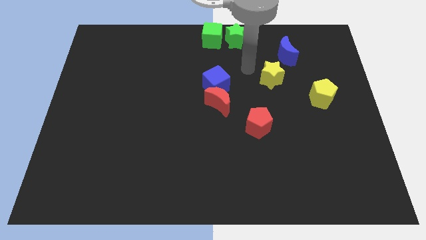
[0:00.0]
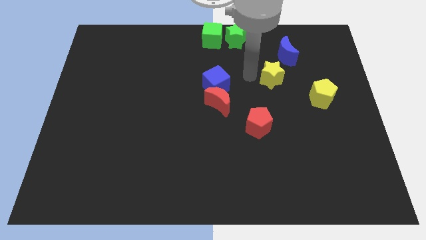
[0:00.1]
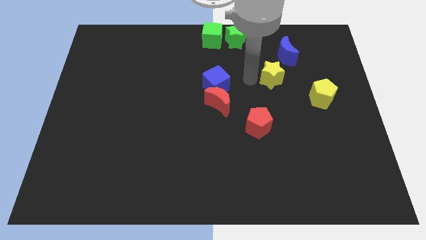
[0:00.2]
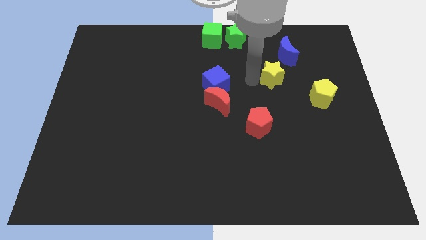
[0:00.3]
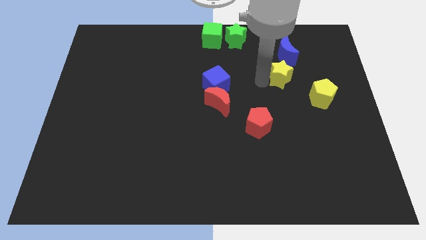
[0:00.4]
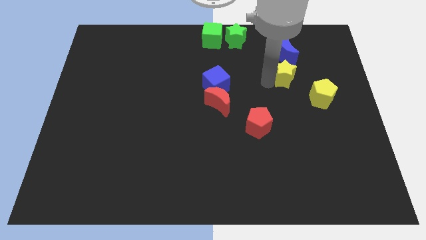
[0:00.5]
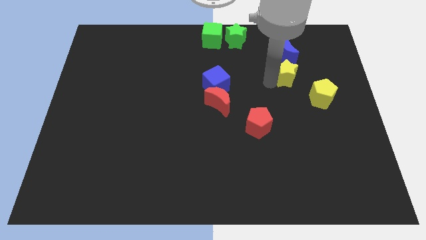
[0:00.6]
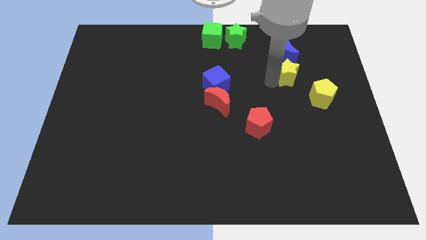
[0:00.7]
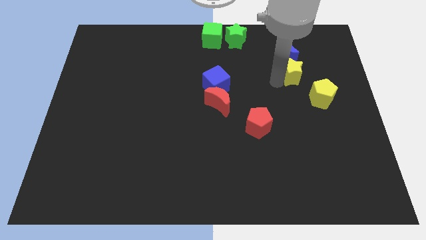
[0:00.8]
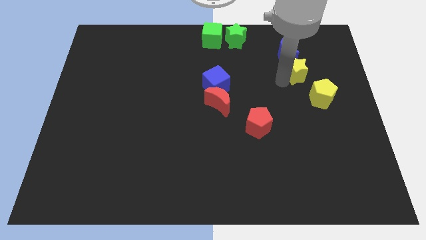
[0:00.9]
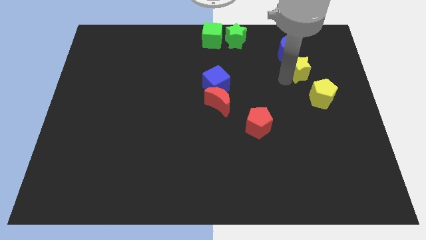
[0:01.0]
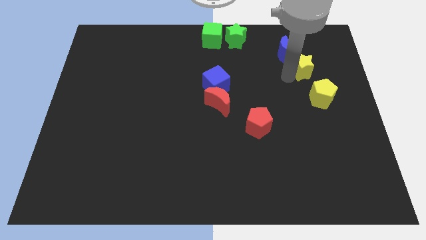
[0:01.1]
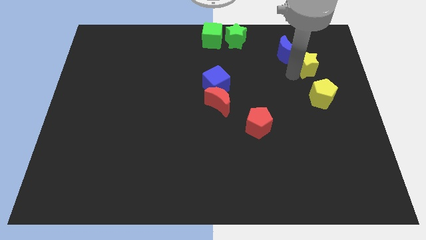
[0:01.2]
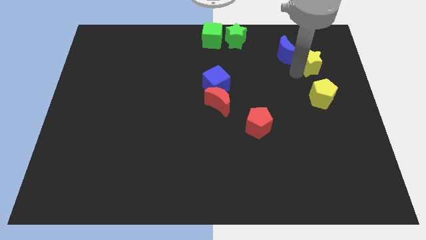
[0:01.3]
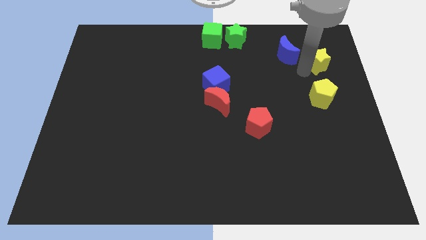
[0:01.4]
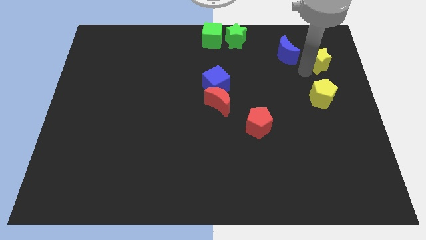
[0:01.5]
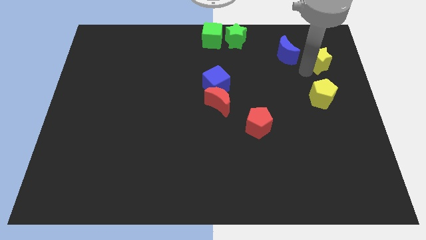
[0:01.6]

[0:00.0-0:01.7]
push the yellow star to the top side of the yellow pentagon

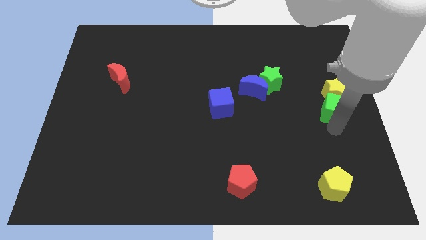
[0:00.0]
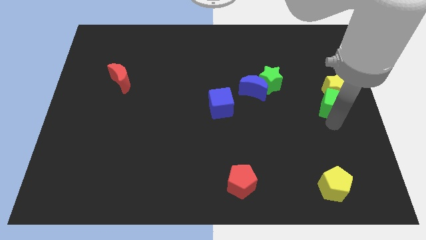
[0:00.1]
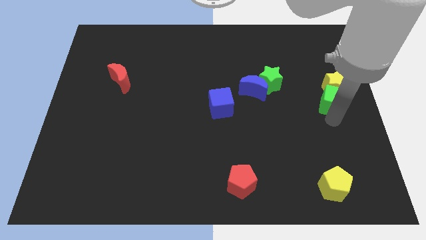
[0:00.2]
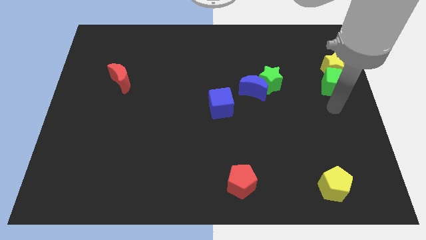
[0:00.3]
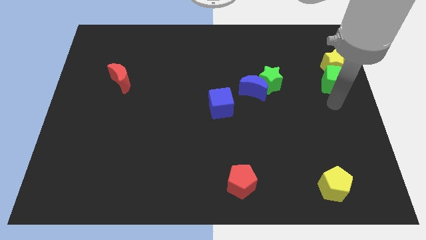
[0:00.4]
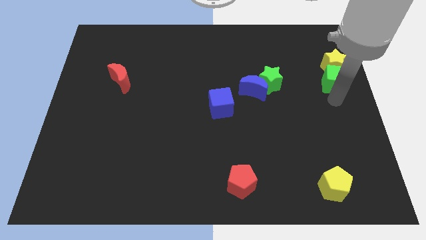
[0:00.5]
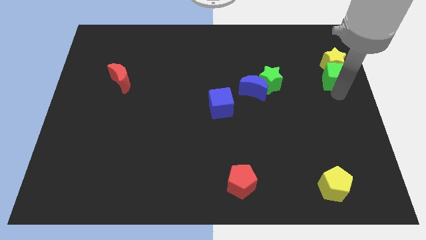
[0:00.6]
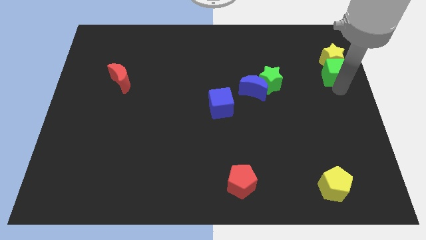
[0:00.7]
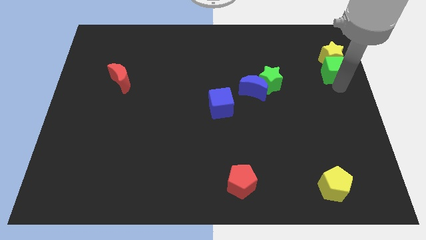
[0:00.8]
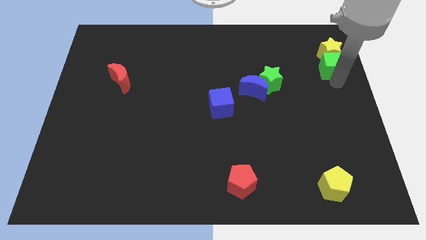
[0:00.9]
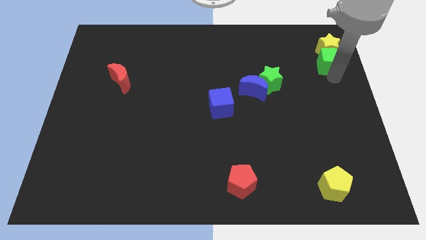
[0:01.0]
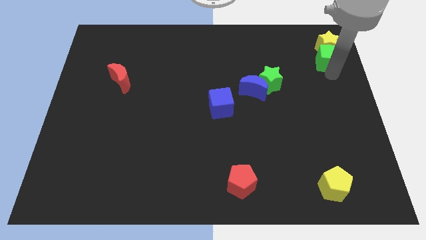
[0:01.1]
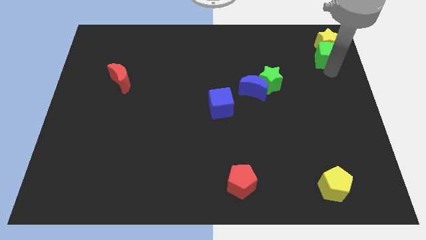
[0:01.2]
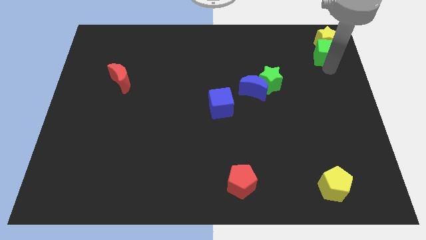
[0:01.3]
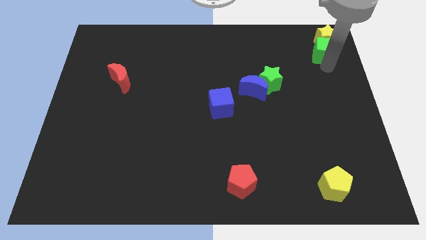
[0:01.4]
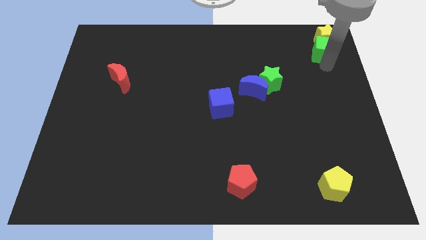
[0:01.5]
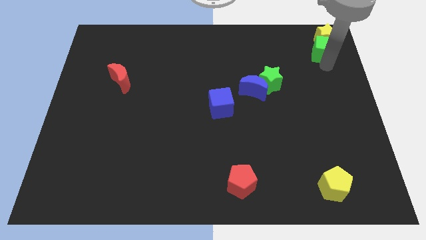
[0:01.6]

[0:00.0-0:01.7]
place yellow star and green cube to the top right corner of the board

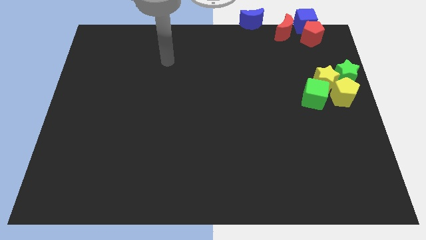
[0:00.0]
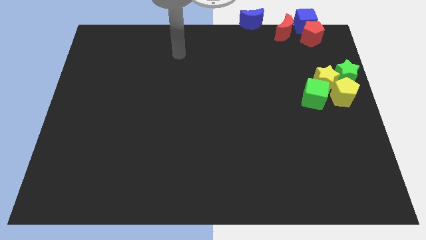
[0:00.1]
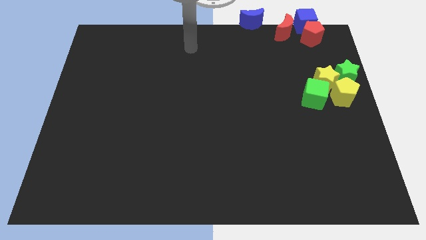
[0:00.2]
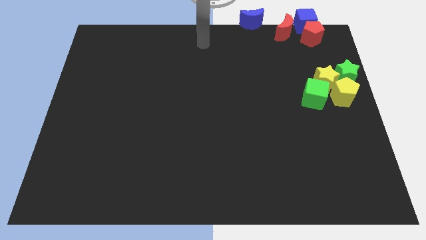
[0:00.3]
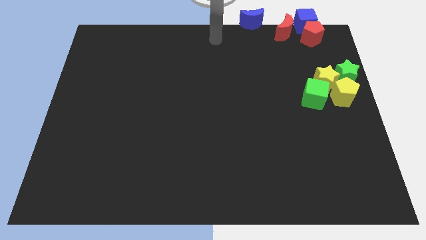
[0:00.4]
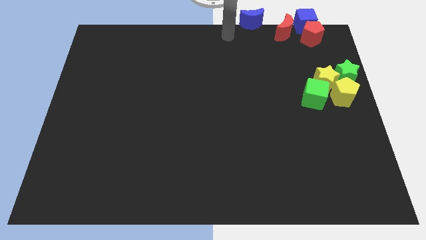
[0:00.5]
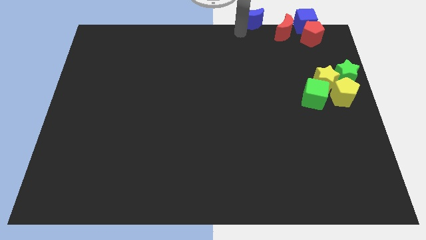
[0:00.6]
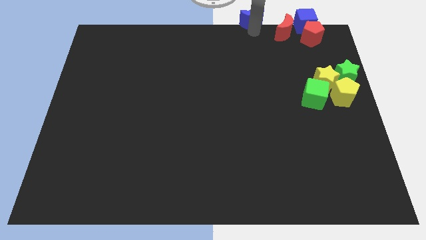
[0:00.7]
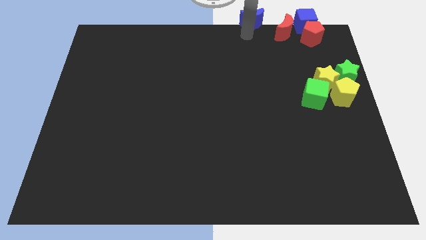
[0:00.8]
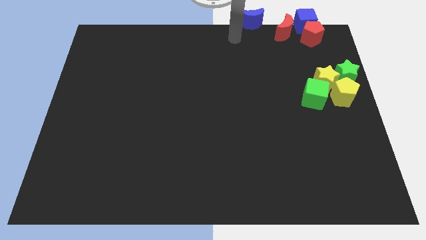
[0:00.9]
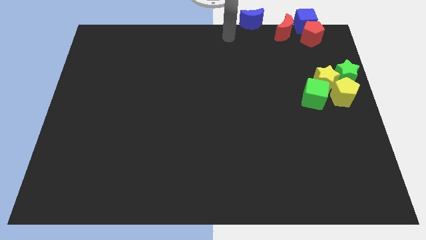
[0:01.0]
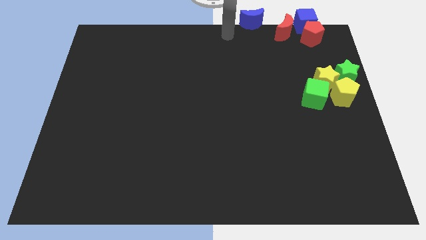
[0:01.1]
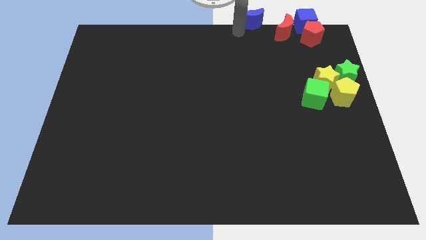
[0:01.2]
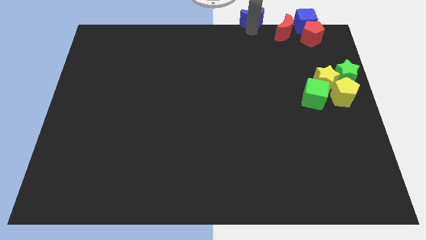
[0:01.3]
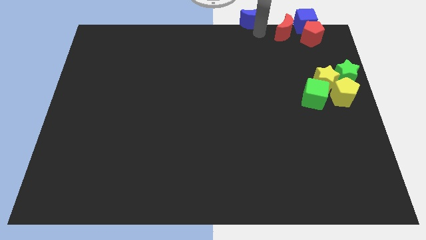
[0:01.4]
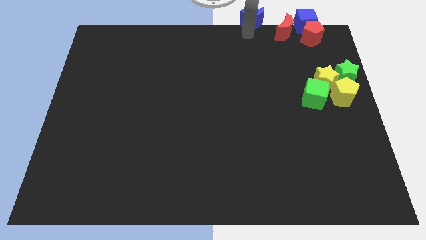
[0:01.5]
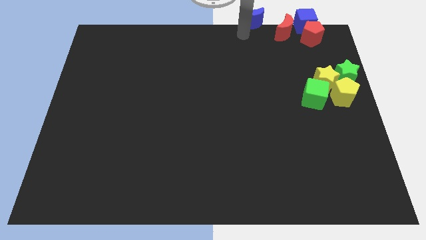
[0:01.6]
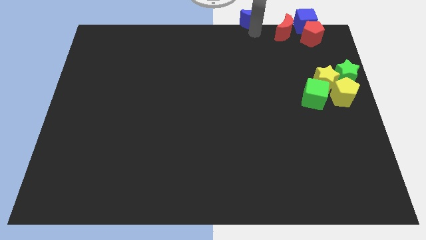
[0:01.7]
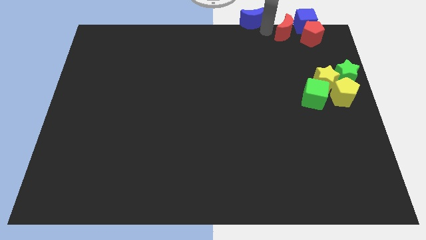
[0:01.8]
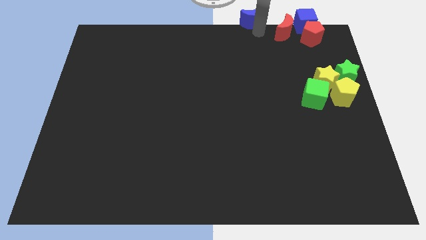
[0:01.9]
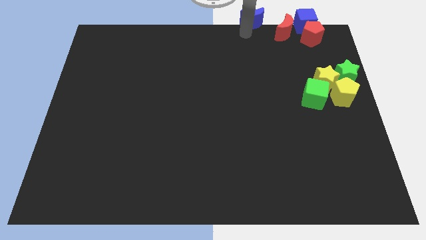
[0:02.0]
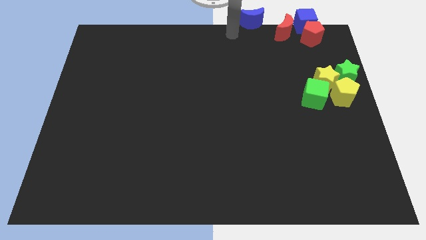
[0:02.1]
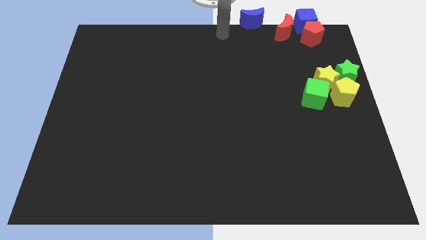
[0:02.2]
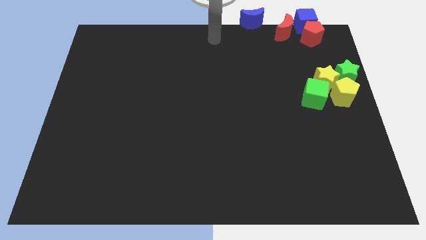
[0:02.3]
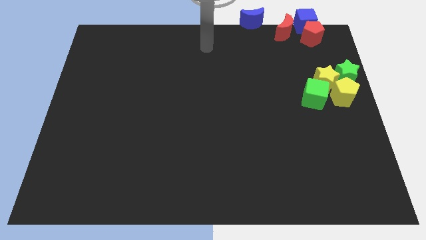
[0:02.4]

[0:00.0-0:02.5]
place your arm at the top center of the board

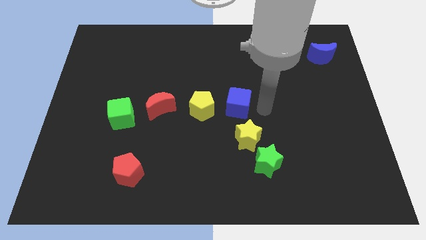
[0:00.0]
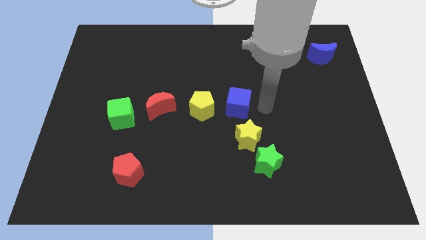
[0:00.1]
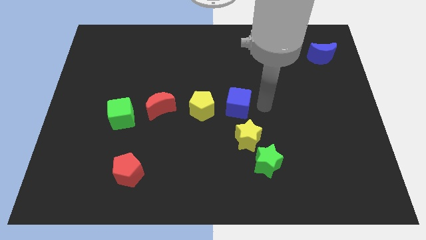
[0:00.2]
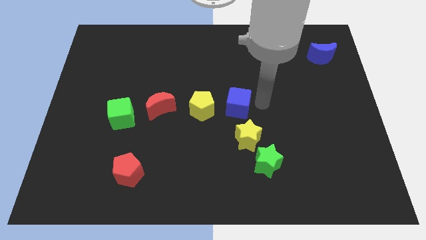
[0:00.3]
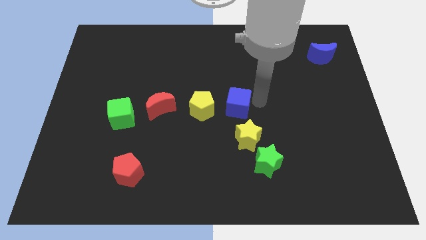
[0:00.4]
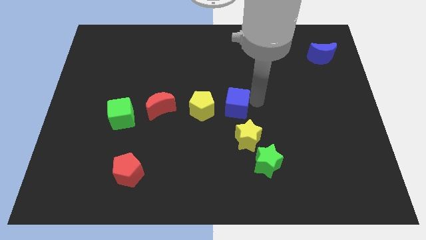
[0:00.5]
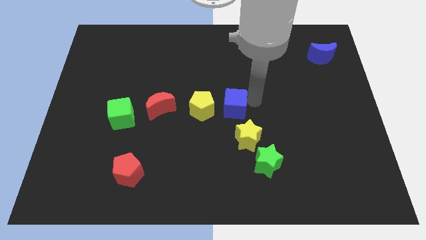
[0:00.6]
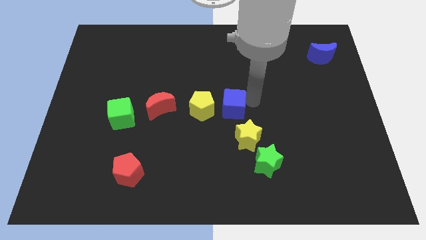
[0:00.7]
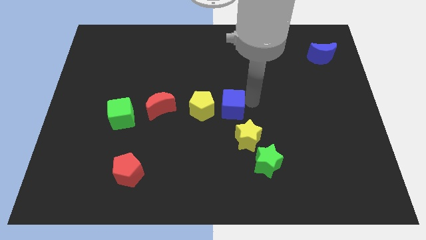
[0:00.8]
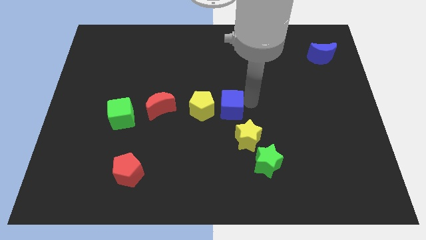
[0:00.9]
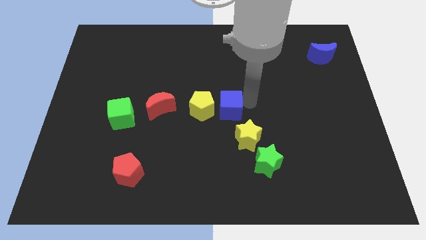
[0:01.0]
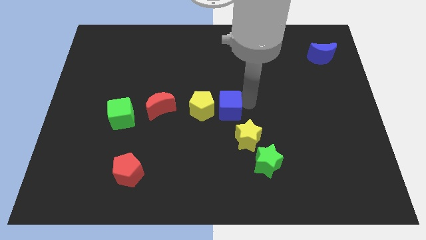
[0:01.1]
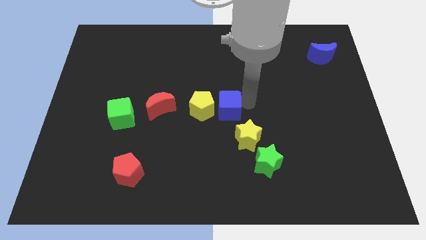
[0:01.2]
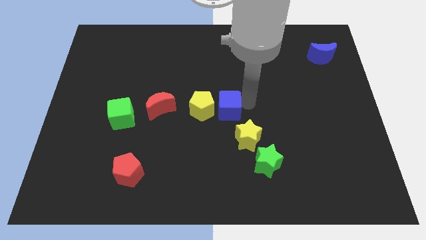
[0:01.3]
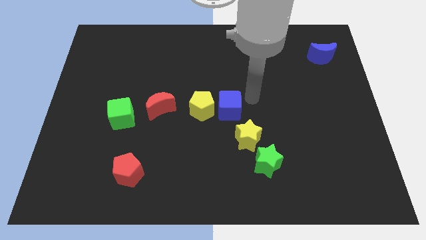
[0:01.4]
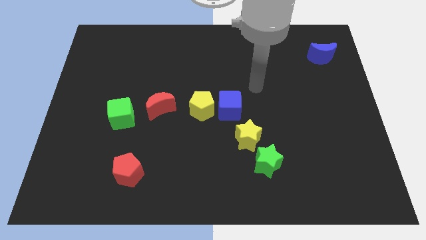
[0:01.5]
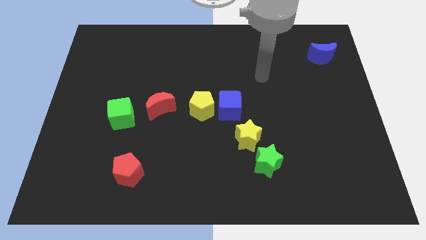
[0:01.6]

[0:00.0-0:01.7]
push the blue cube next to the yellow pentagon

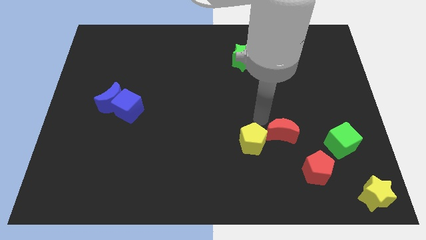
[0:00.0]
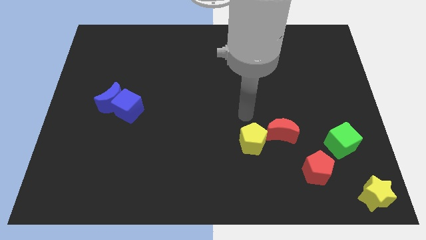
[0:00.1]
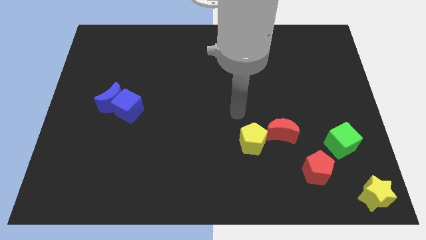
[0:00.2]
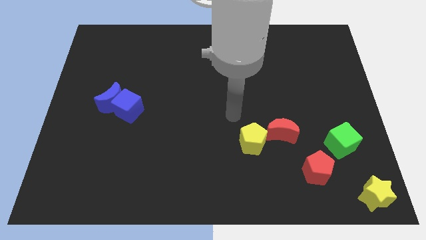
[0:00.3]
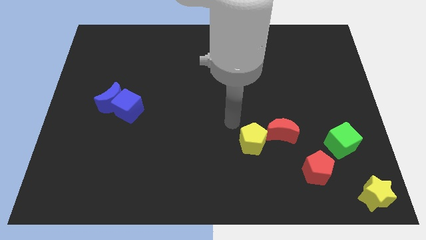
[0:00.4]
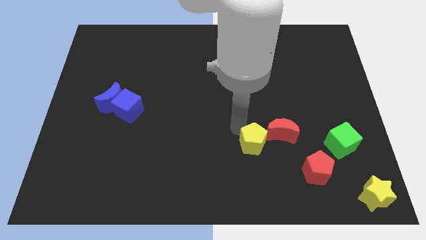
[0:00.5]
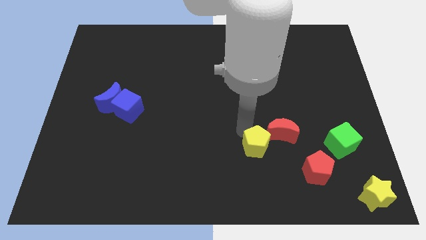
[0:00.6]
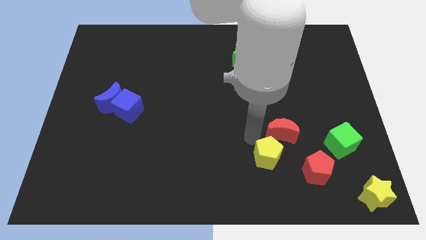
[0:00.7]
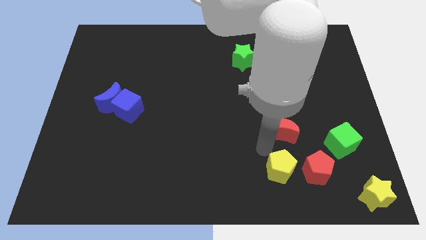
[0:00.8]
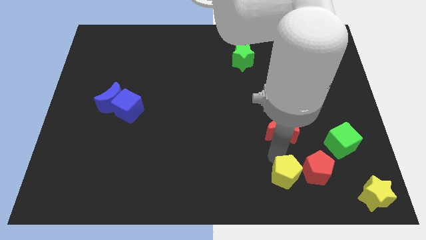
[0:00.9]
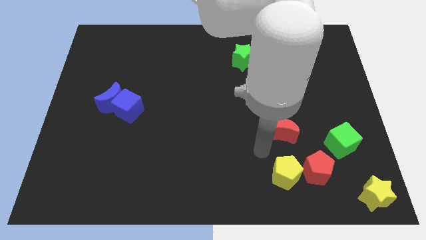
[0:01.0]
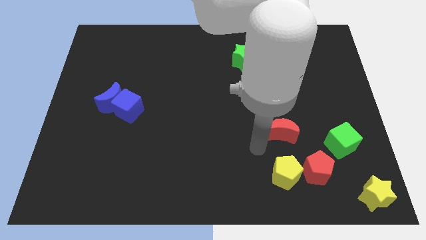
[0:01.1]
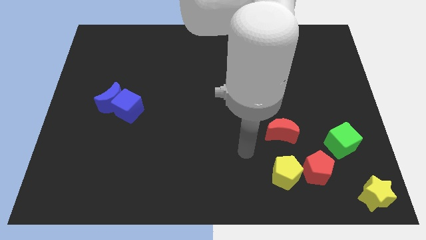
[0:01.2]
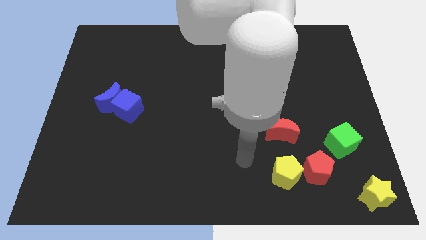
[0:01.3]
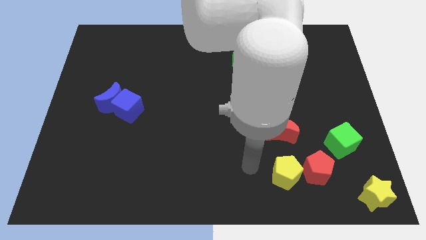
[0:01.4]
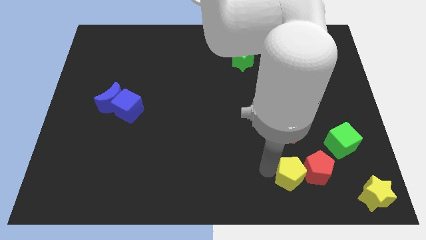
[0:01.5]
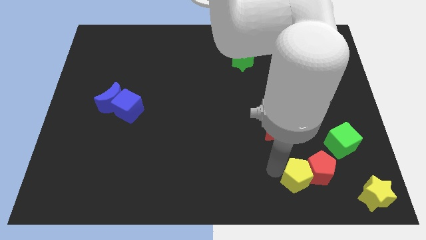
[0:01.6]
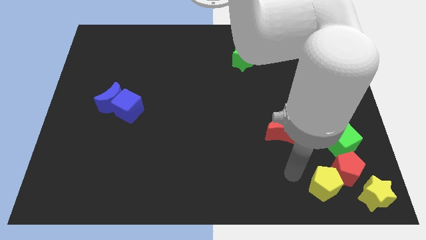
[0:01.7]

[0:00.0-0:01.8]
push the yellow pentagon into the red pentagon
